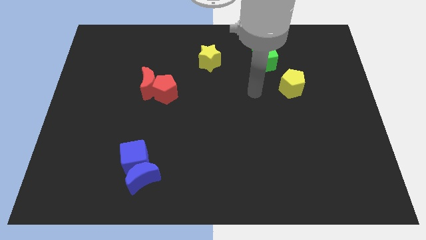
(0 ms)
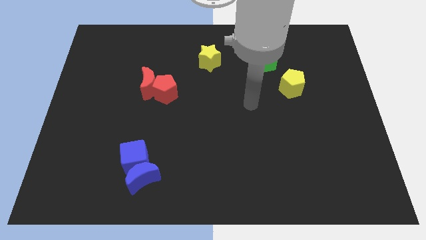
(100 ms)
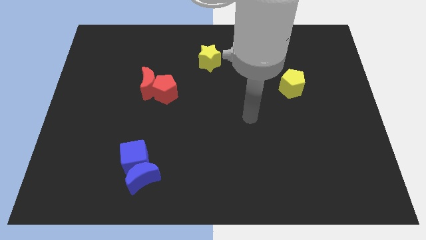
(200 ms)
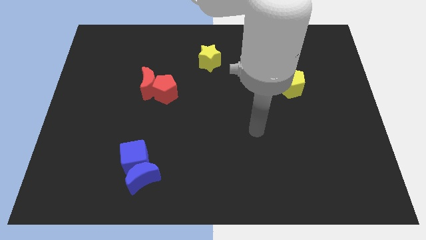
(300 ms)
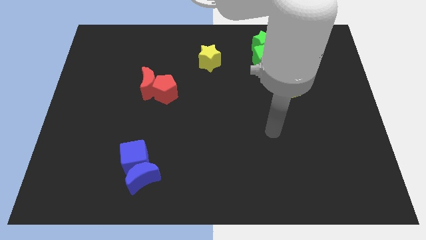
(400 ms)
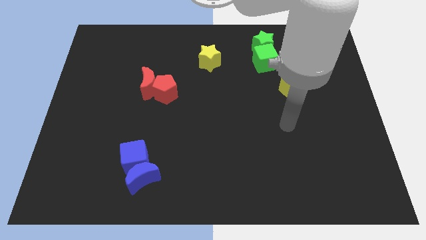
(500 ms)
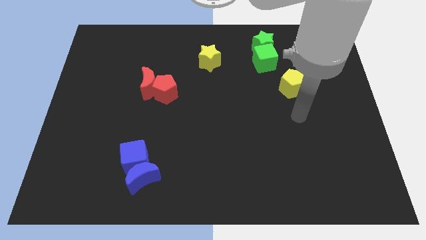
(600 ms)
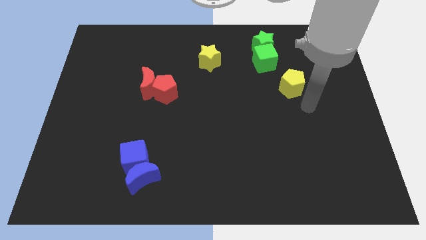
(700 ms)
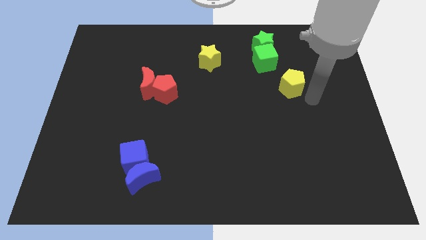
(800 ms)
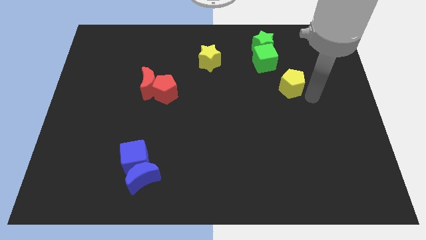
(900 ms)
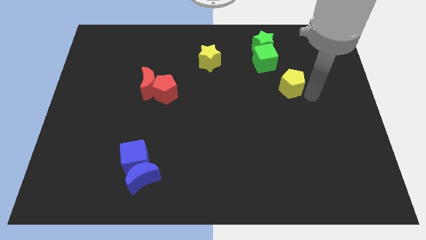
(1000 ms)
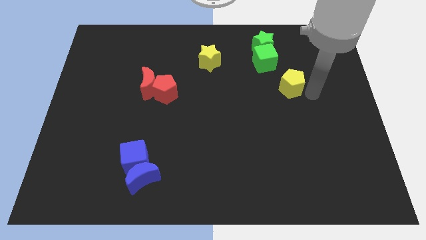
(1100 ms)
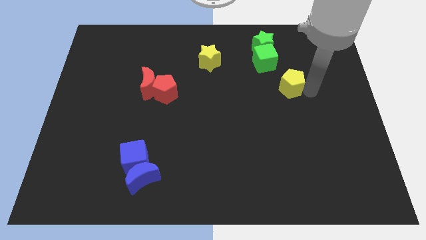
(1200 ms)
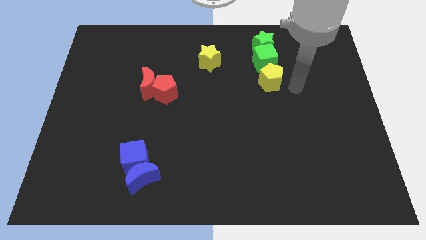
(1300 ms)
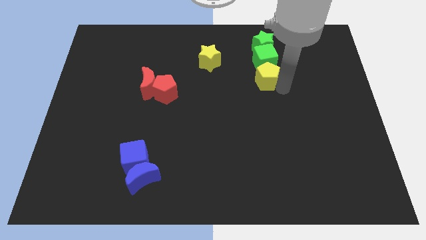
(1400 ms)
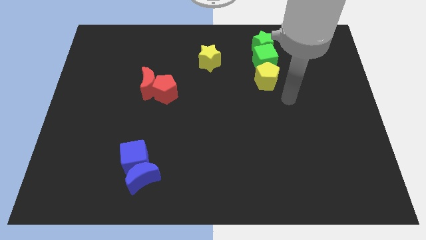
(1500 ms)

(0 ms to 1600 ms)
place the yellow pentagon below the green cube

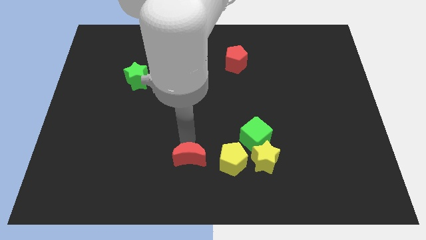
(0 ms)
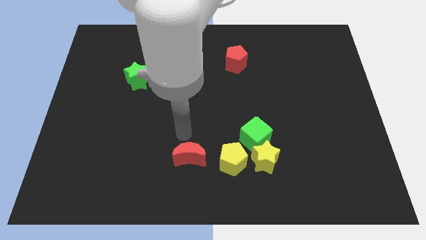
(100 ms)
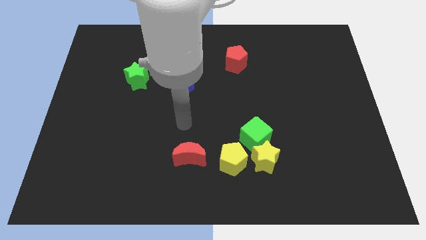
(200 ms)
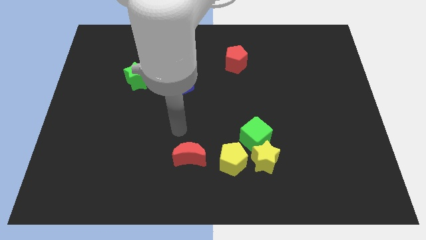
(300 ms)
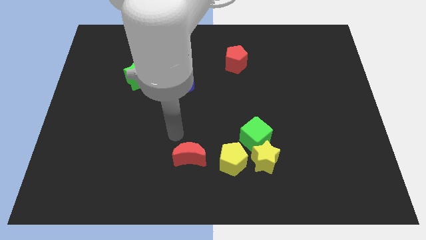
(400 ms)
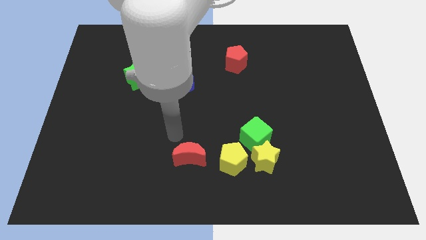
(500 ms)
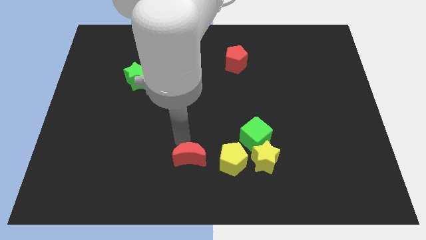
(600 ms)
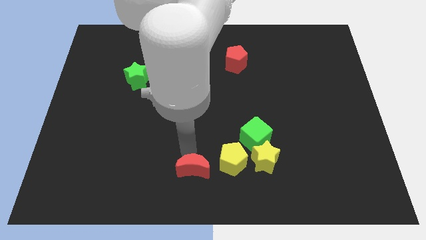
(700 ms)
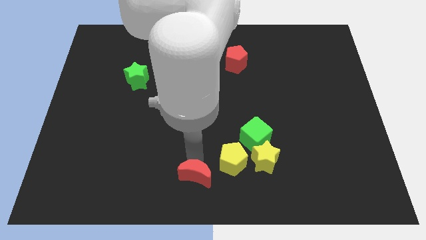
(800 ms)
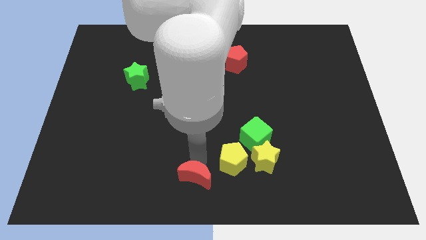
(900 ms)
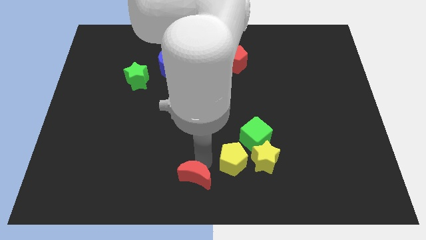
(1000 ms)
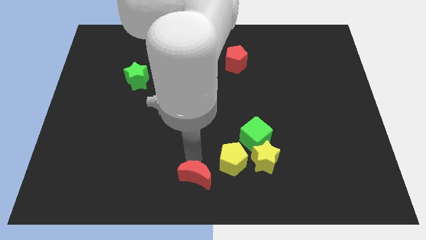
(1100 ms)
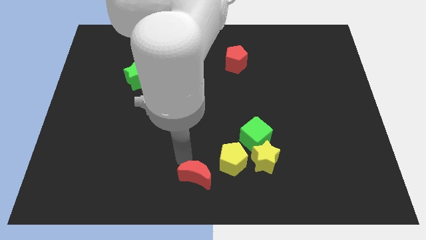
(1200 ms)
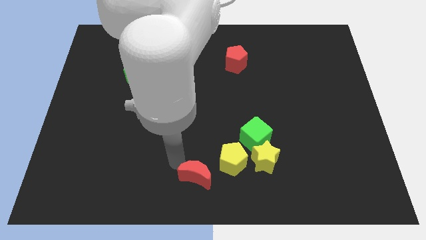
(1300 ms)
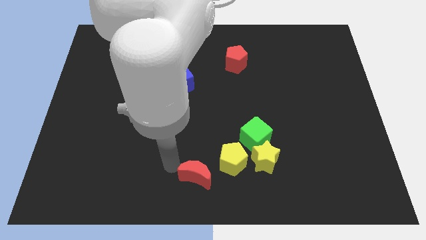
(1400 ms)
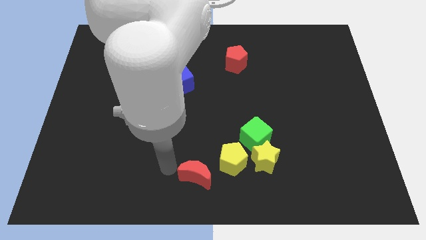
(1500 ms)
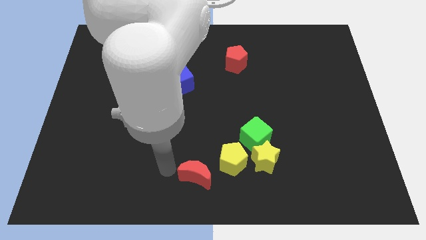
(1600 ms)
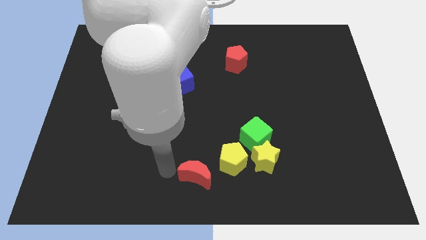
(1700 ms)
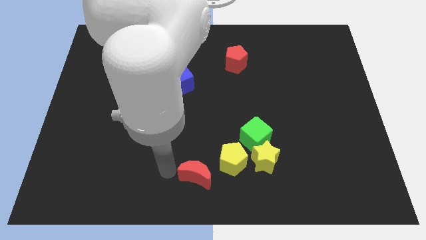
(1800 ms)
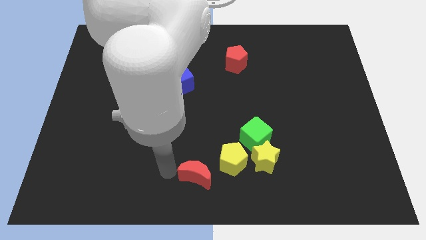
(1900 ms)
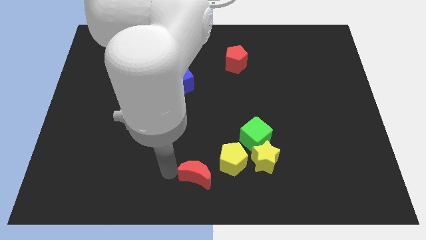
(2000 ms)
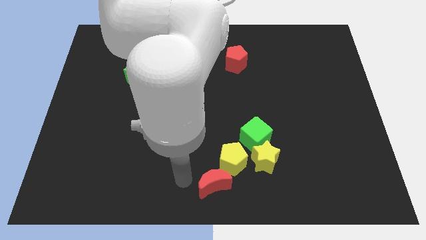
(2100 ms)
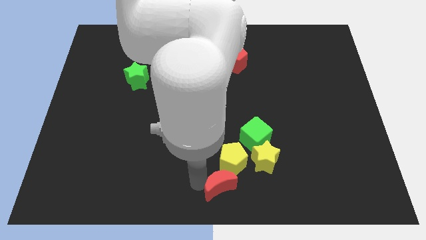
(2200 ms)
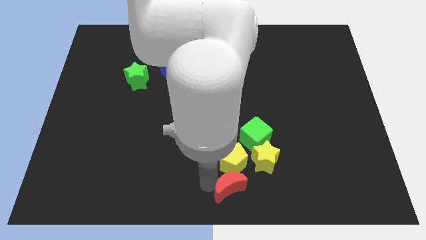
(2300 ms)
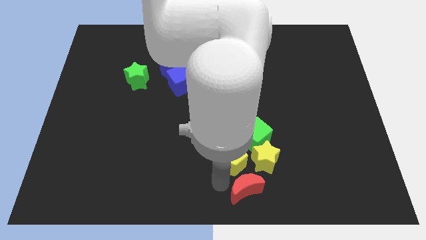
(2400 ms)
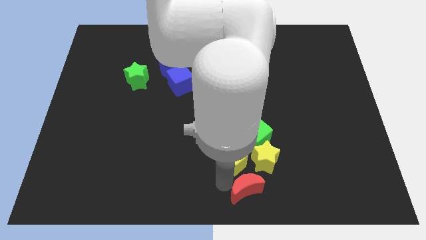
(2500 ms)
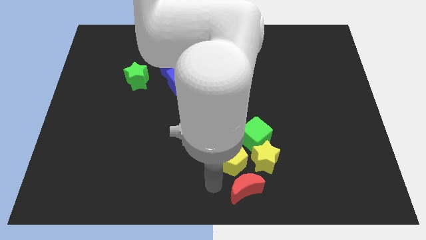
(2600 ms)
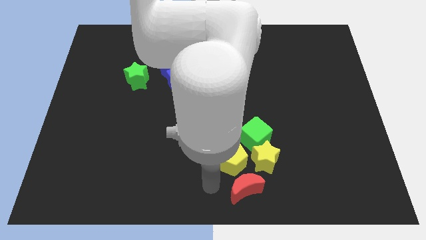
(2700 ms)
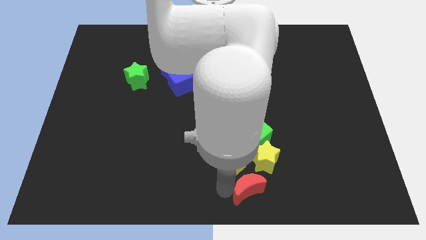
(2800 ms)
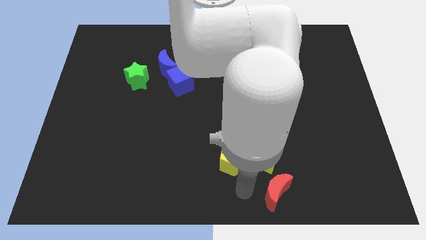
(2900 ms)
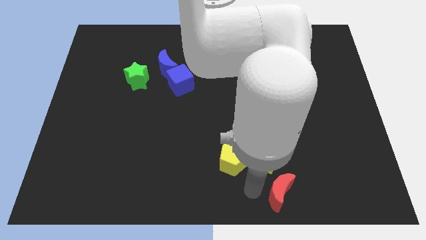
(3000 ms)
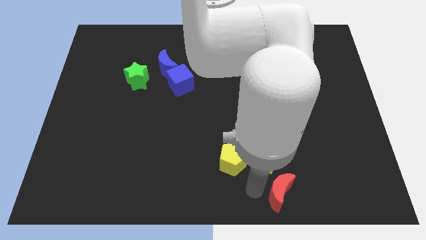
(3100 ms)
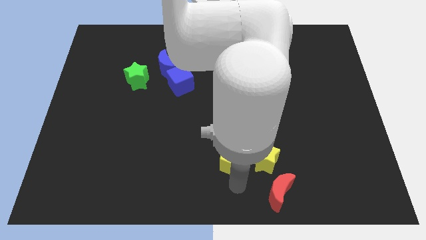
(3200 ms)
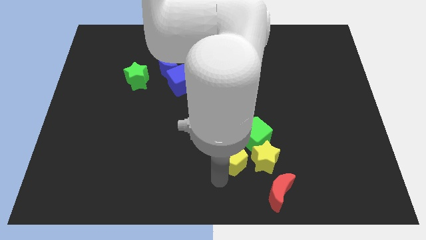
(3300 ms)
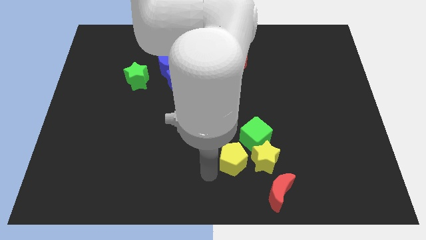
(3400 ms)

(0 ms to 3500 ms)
move the red crescent below to the yellow star

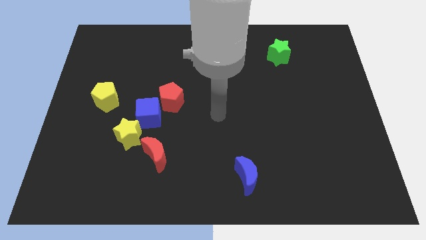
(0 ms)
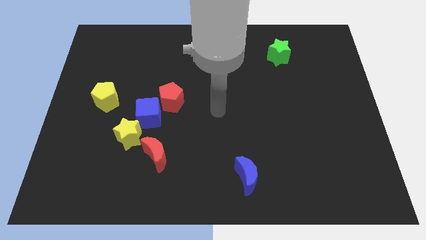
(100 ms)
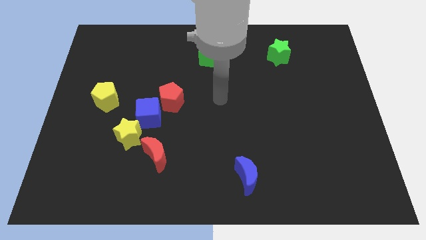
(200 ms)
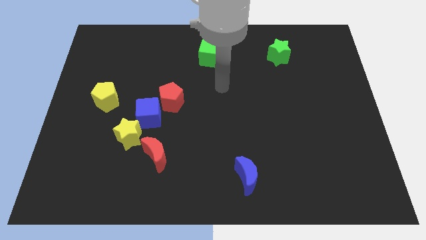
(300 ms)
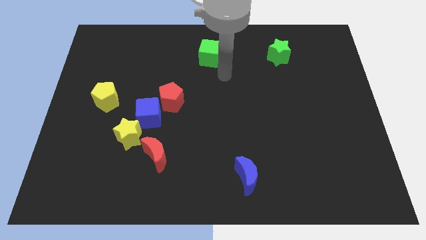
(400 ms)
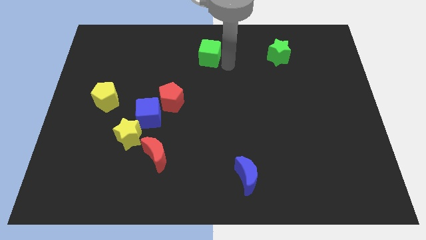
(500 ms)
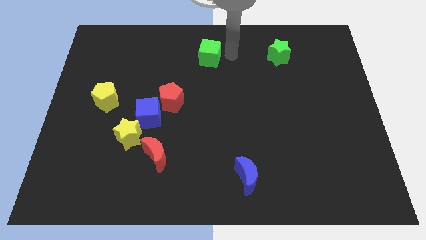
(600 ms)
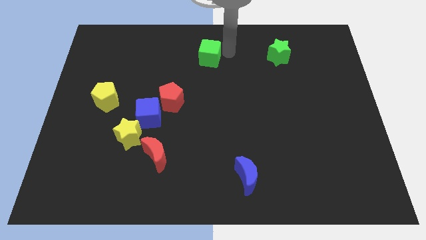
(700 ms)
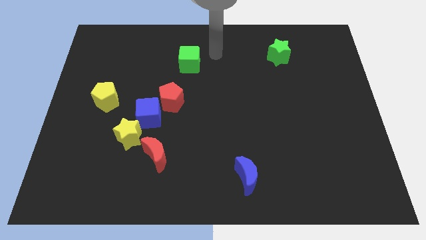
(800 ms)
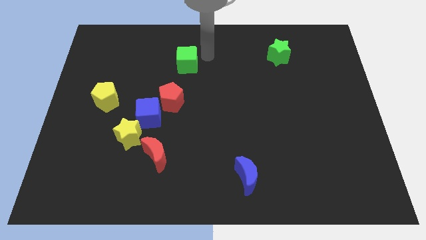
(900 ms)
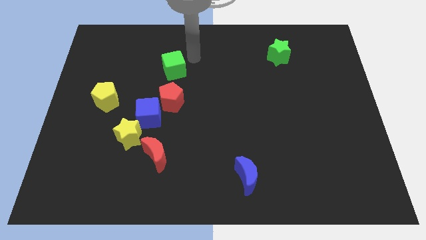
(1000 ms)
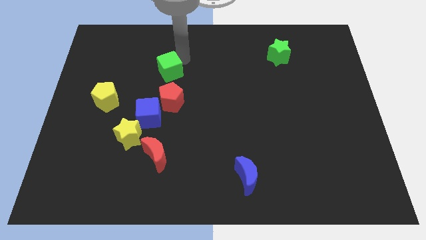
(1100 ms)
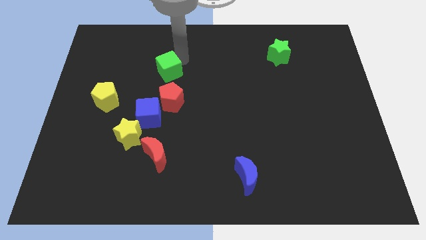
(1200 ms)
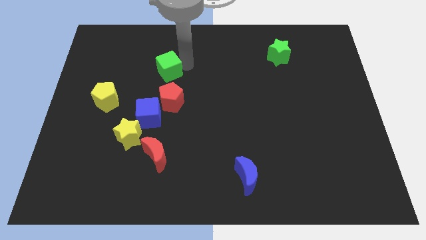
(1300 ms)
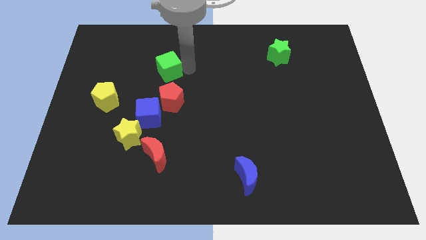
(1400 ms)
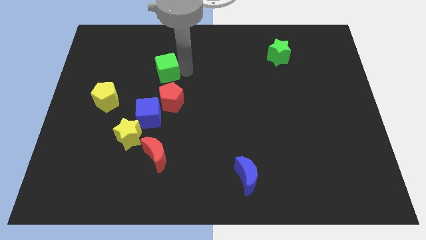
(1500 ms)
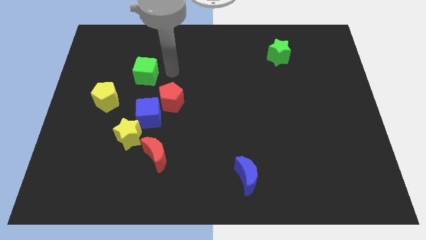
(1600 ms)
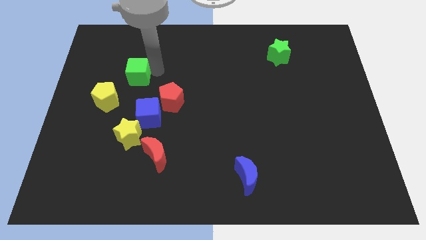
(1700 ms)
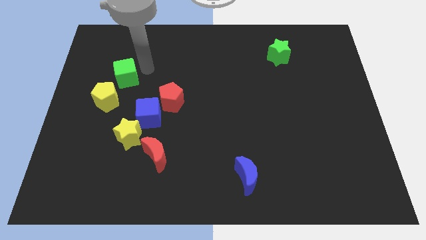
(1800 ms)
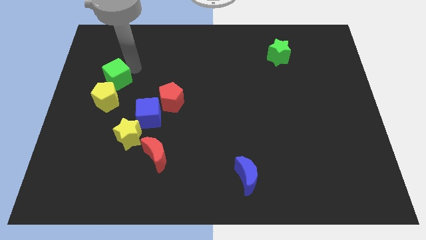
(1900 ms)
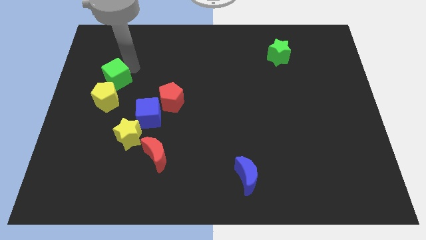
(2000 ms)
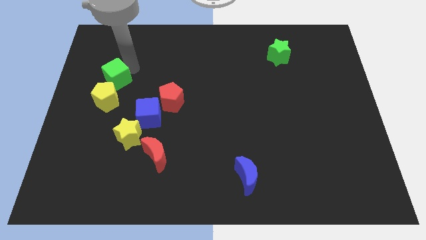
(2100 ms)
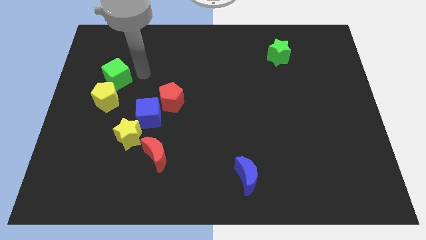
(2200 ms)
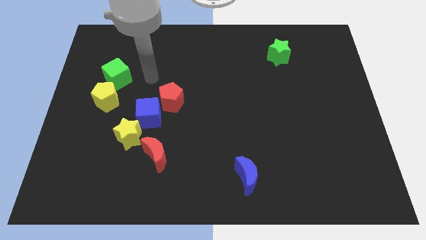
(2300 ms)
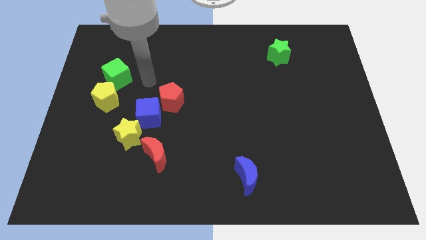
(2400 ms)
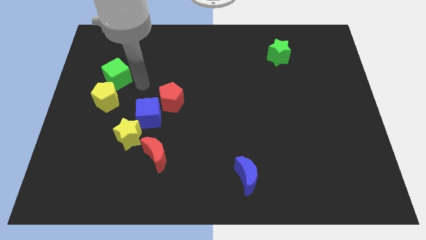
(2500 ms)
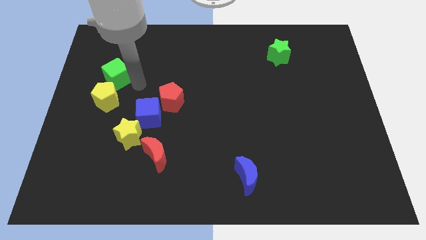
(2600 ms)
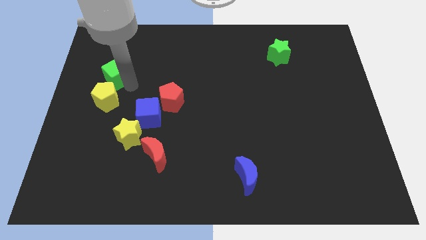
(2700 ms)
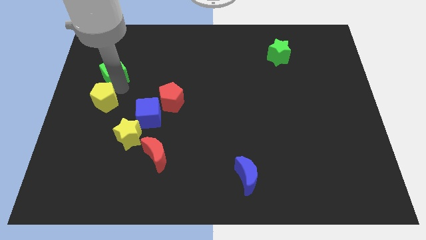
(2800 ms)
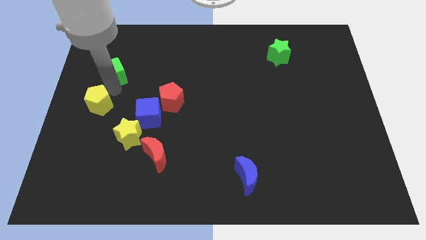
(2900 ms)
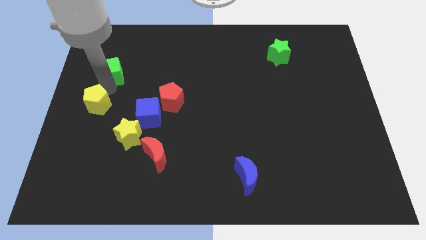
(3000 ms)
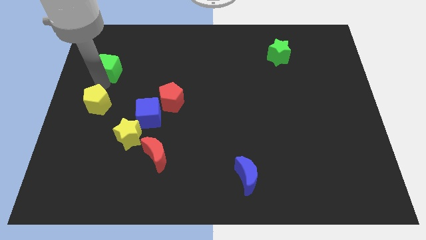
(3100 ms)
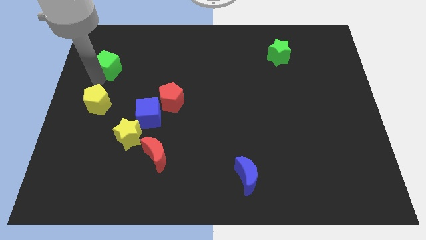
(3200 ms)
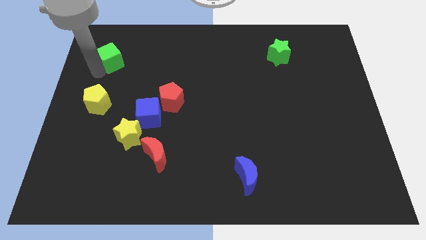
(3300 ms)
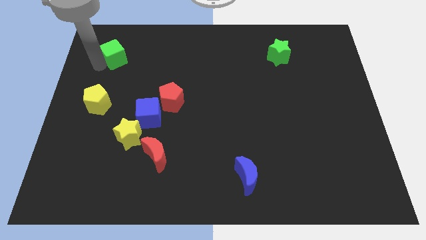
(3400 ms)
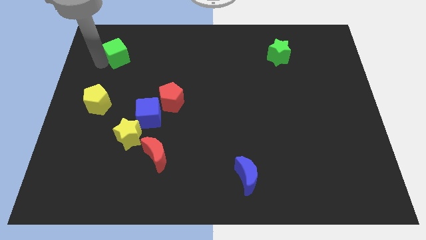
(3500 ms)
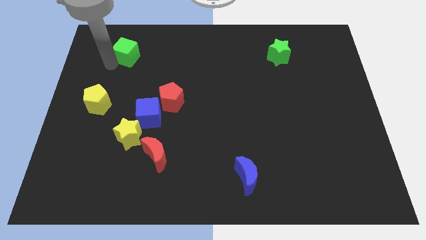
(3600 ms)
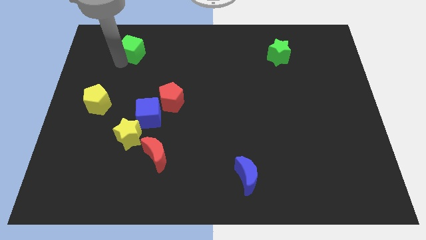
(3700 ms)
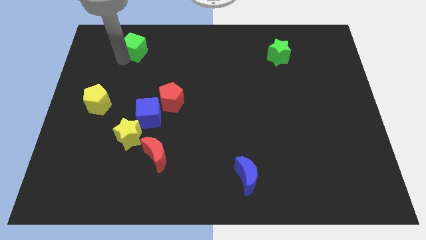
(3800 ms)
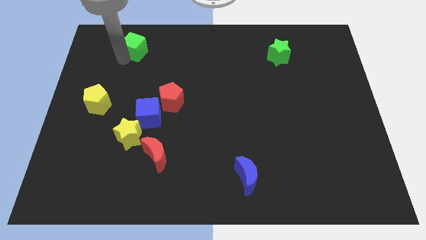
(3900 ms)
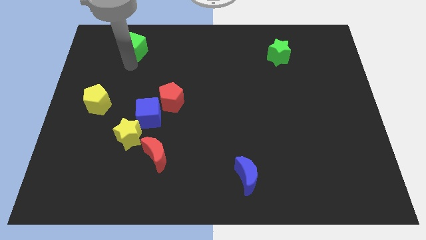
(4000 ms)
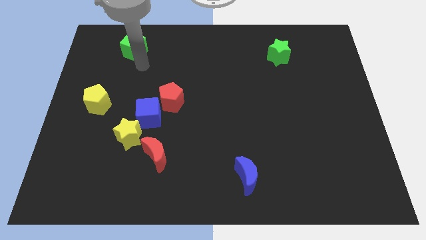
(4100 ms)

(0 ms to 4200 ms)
slide the green cube diagonally top left to the red pentagon
